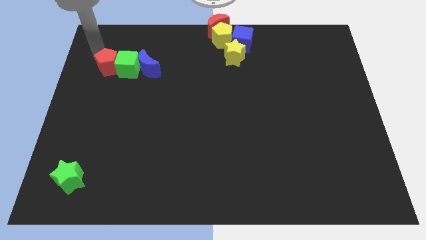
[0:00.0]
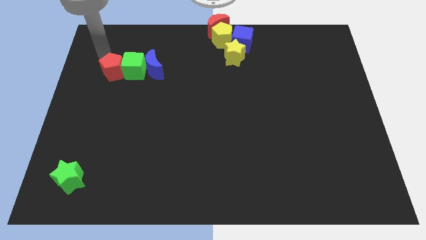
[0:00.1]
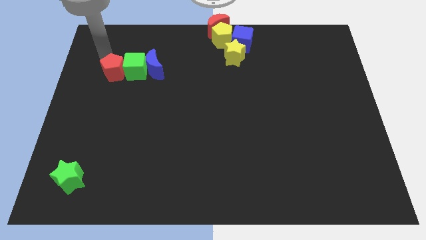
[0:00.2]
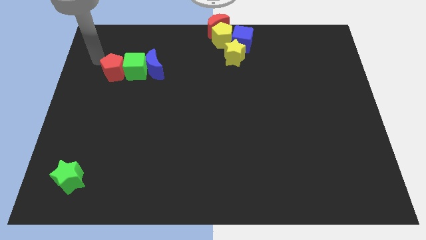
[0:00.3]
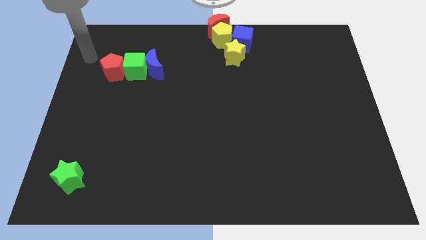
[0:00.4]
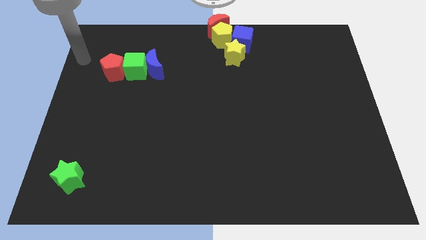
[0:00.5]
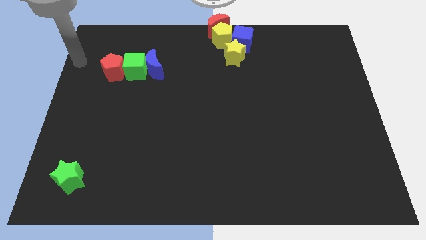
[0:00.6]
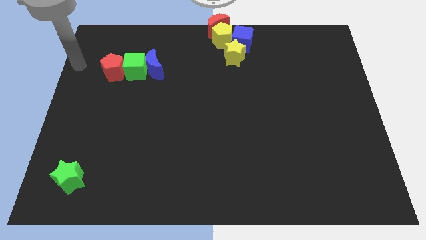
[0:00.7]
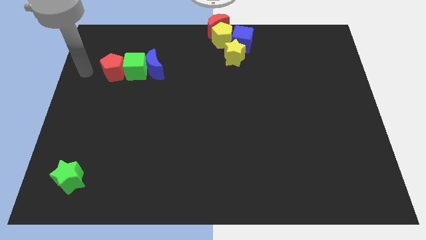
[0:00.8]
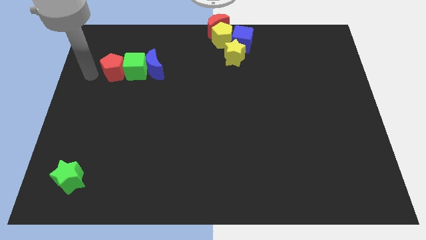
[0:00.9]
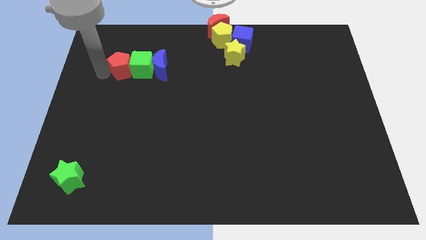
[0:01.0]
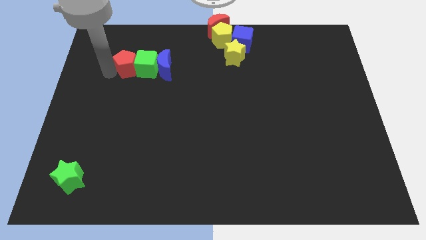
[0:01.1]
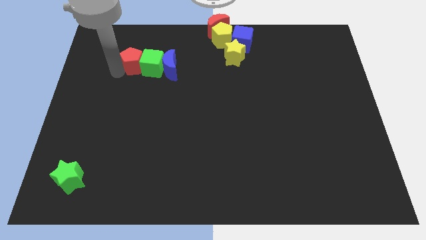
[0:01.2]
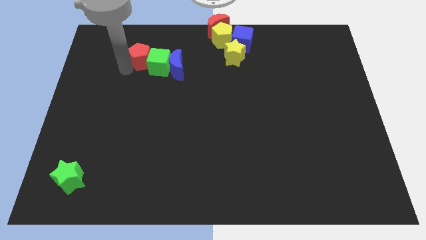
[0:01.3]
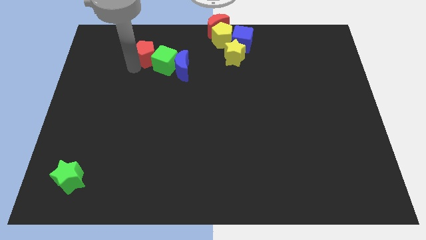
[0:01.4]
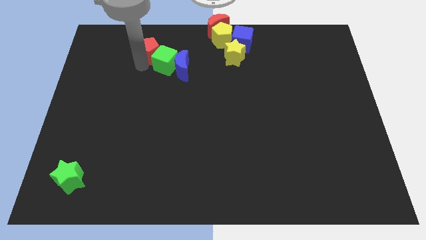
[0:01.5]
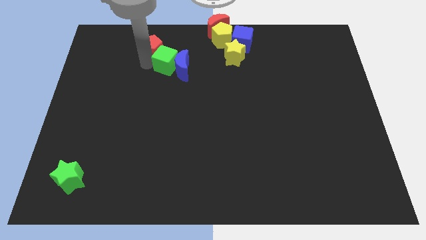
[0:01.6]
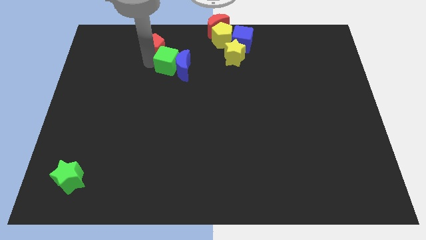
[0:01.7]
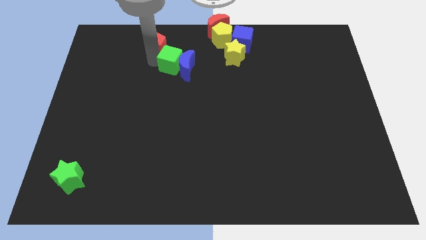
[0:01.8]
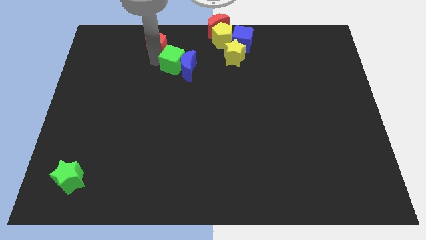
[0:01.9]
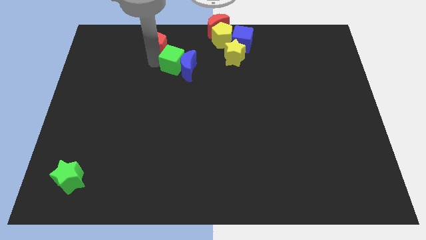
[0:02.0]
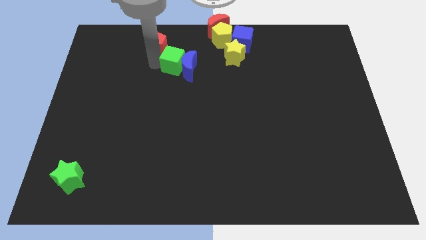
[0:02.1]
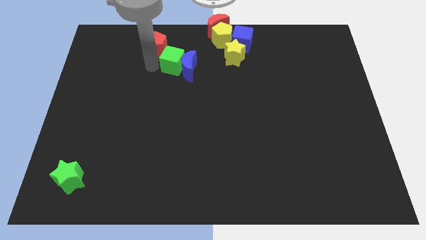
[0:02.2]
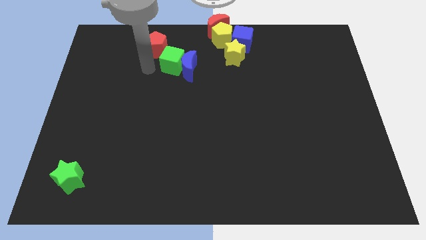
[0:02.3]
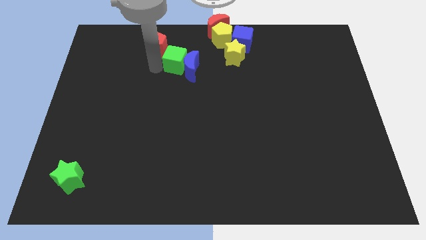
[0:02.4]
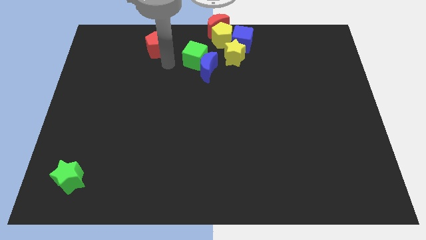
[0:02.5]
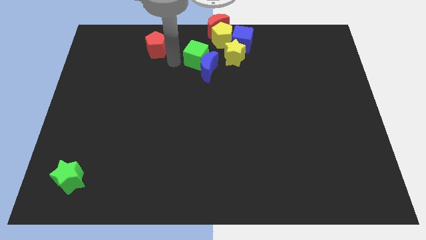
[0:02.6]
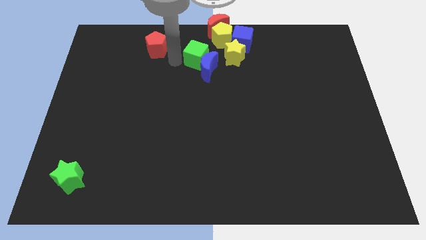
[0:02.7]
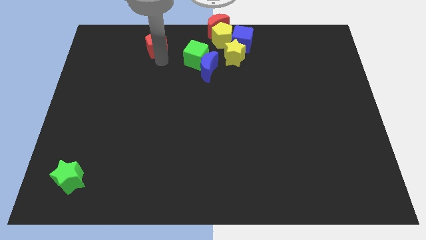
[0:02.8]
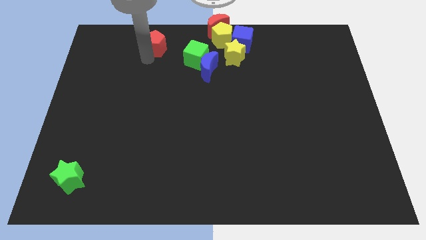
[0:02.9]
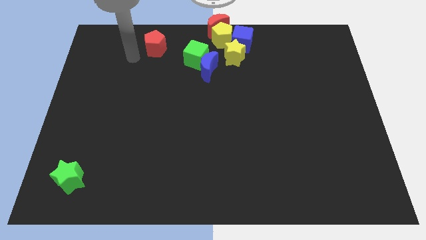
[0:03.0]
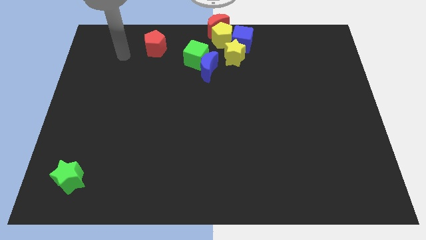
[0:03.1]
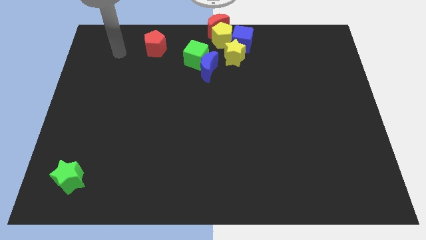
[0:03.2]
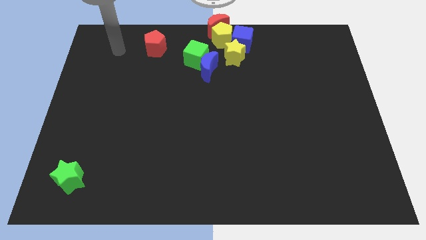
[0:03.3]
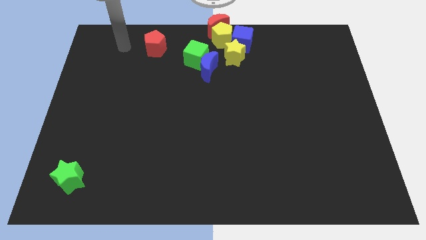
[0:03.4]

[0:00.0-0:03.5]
separate the red pentagon from the green cube

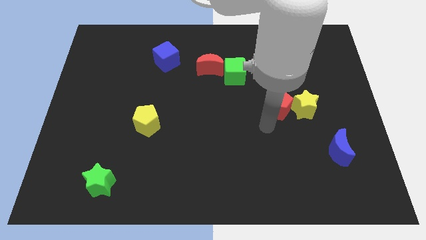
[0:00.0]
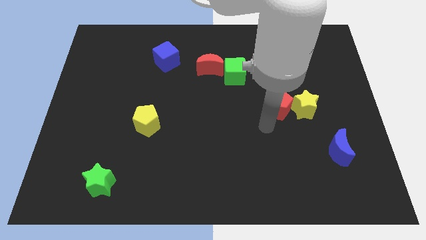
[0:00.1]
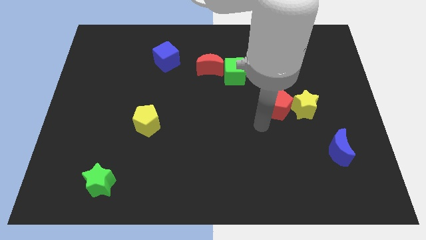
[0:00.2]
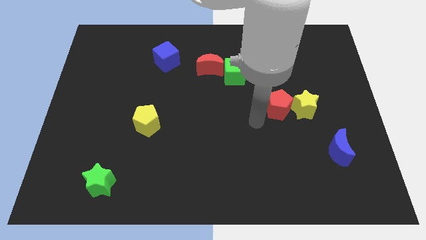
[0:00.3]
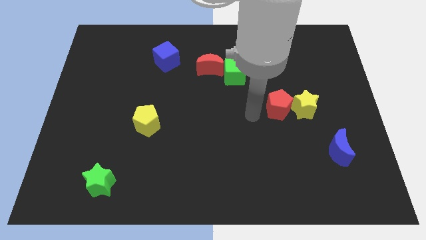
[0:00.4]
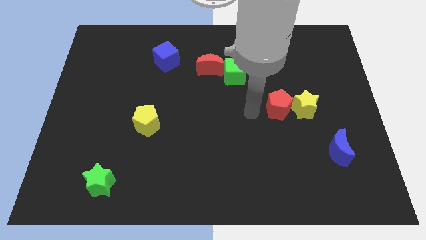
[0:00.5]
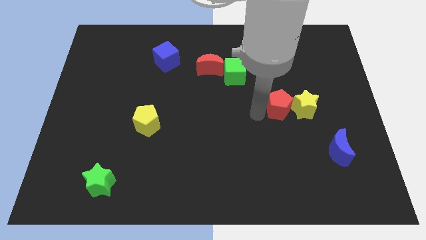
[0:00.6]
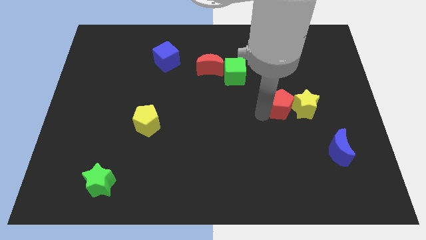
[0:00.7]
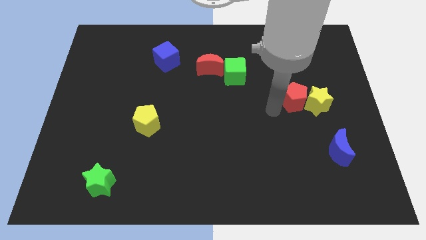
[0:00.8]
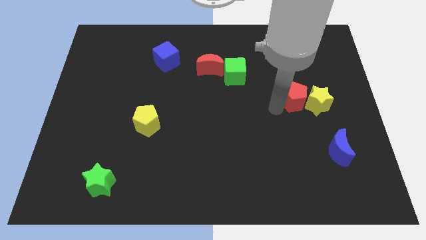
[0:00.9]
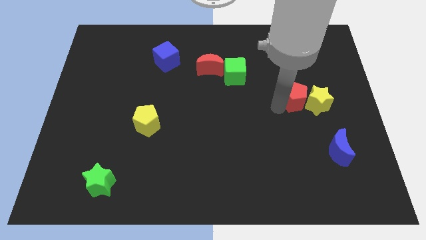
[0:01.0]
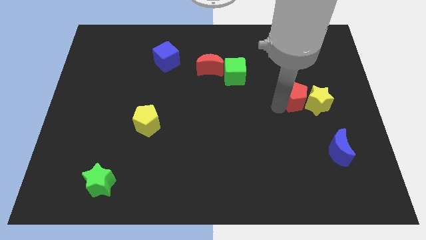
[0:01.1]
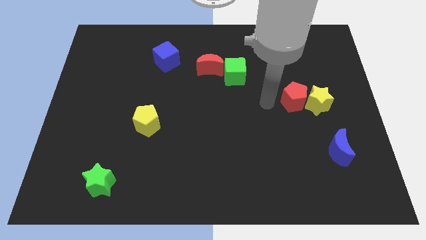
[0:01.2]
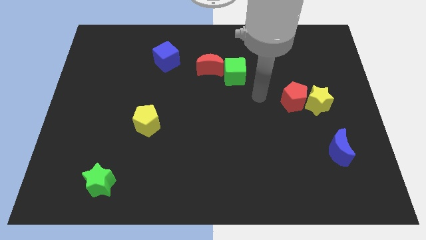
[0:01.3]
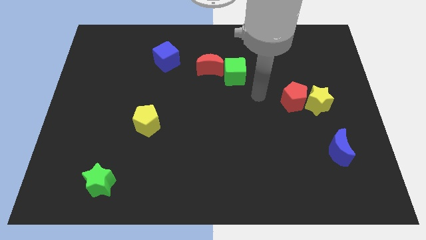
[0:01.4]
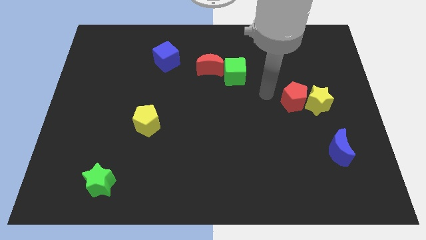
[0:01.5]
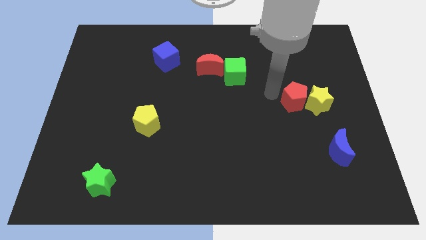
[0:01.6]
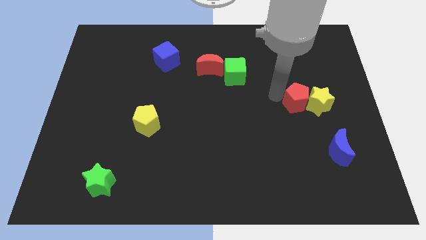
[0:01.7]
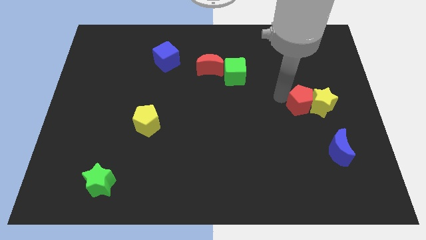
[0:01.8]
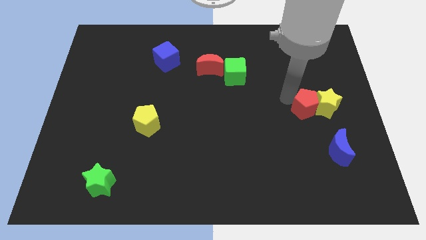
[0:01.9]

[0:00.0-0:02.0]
move yellow star and red pentagon slightly right

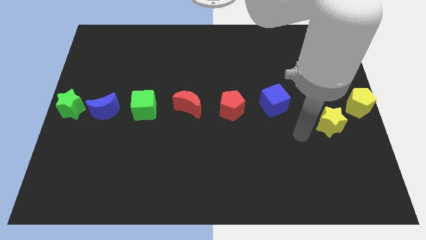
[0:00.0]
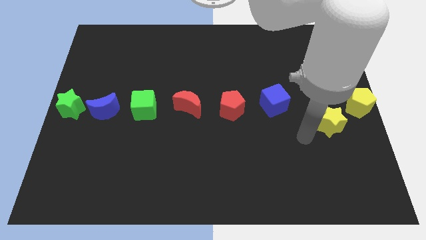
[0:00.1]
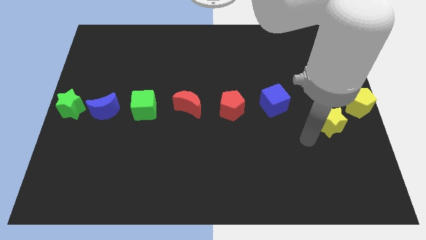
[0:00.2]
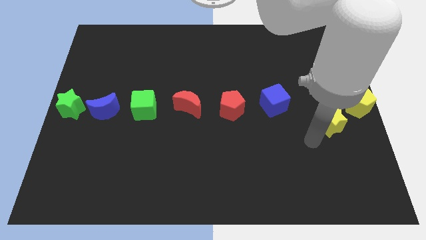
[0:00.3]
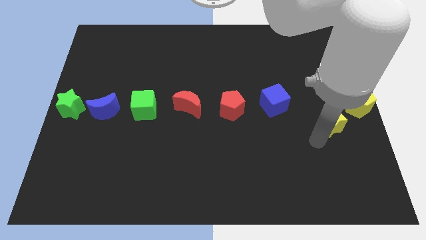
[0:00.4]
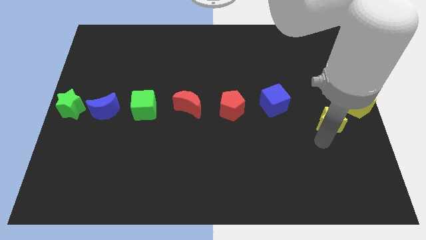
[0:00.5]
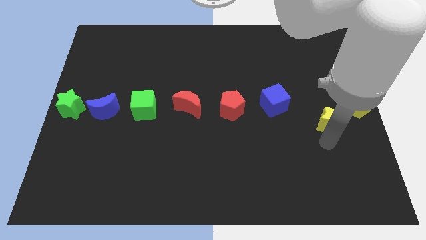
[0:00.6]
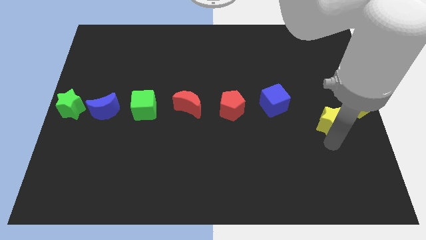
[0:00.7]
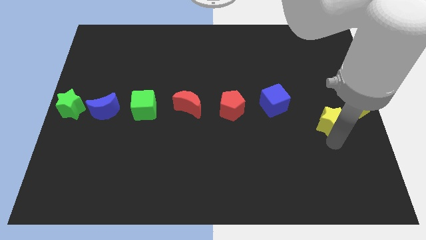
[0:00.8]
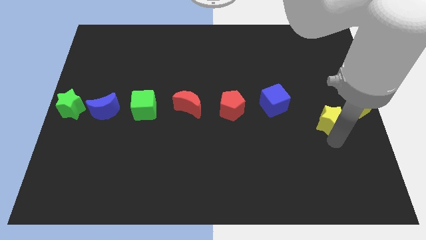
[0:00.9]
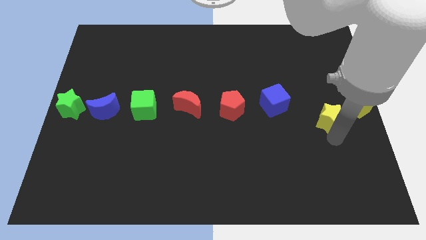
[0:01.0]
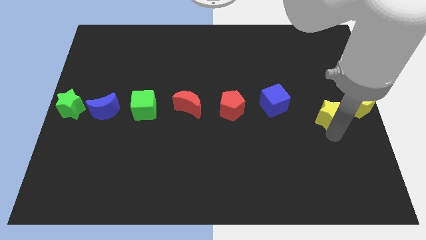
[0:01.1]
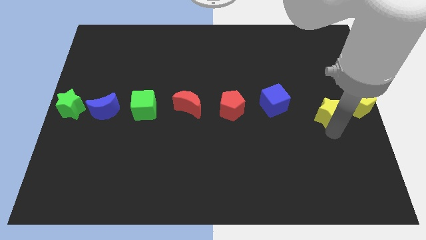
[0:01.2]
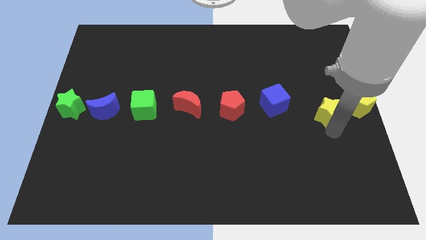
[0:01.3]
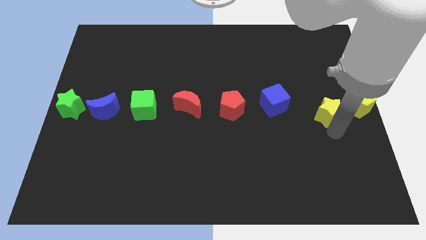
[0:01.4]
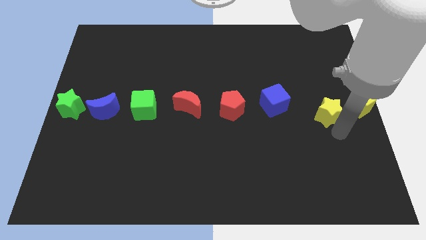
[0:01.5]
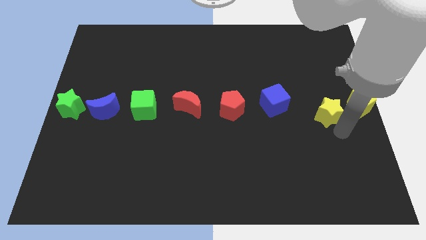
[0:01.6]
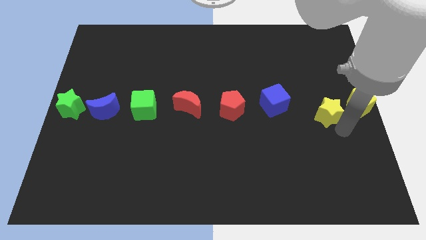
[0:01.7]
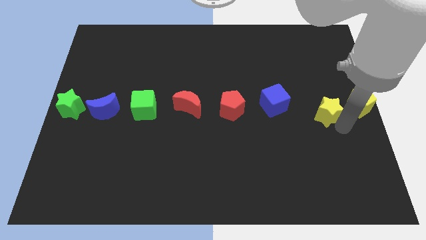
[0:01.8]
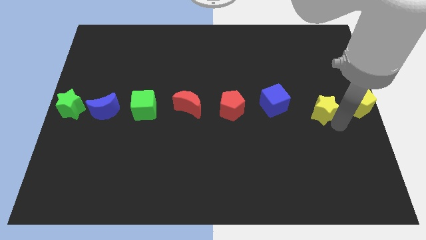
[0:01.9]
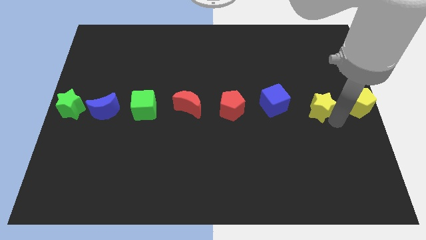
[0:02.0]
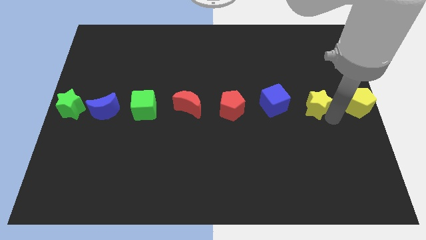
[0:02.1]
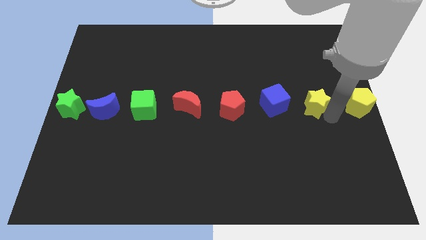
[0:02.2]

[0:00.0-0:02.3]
place the yellow star in between the blue cube and yellow pentagon

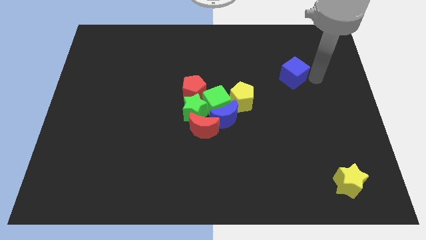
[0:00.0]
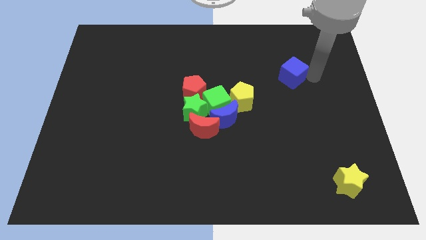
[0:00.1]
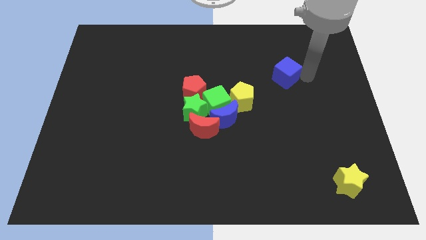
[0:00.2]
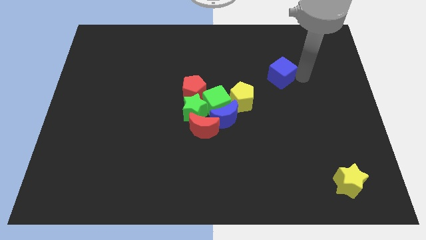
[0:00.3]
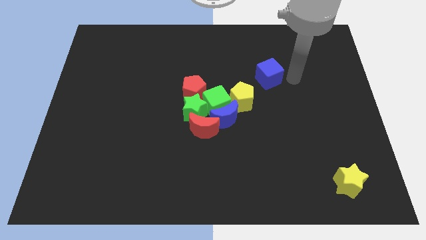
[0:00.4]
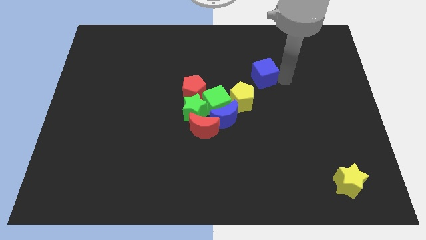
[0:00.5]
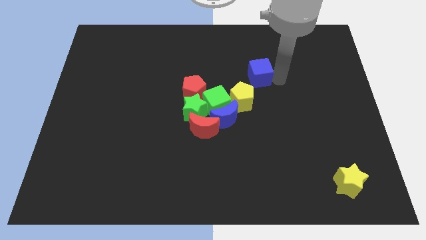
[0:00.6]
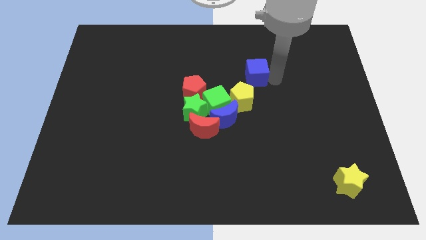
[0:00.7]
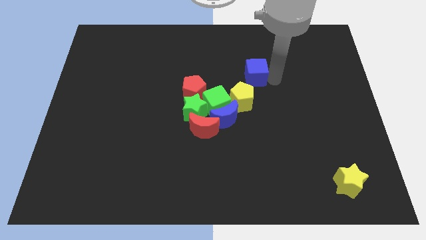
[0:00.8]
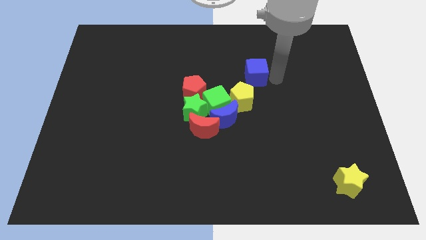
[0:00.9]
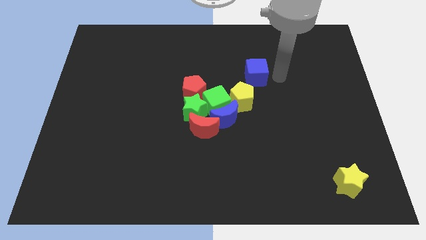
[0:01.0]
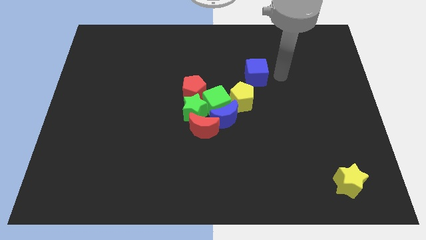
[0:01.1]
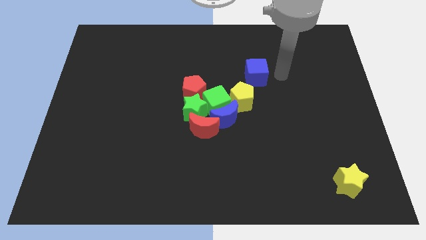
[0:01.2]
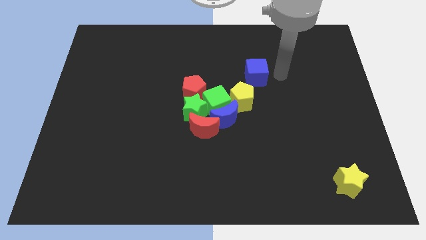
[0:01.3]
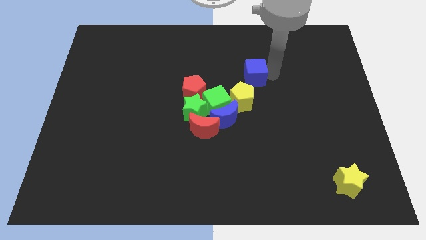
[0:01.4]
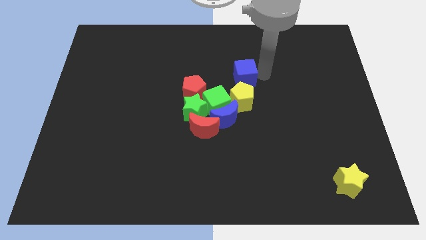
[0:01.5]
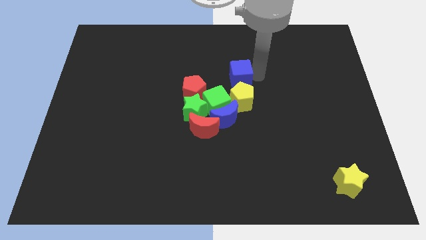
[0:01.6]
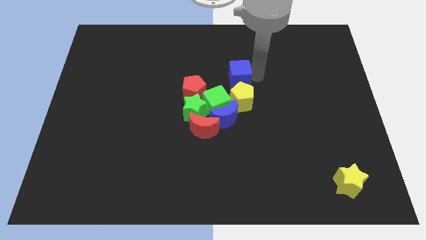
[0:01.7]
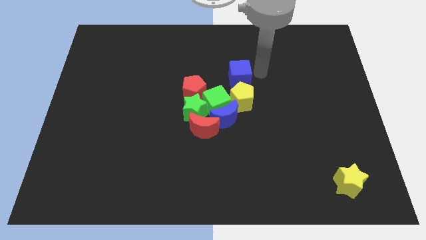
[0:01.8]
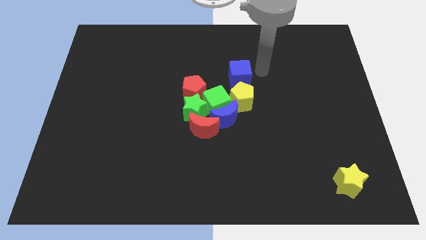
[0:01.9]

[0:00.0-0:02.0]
place the blue cube above the yellow pentagon
